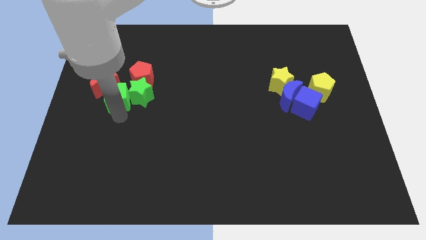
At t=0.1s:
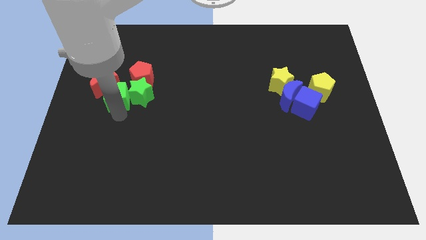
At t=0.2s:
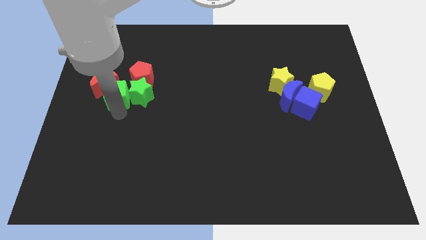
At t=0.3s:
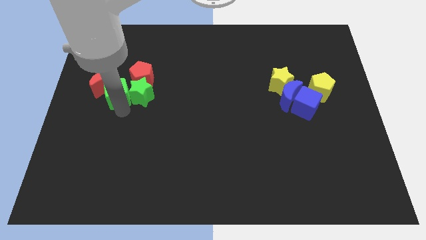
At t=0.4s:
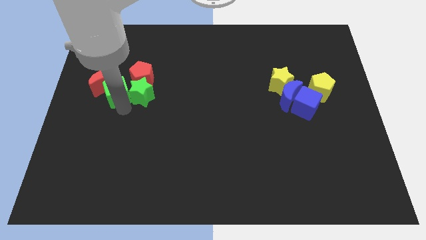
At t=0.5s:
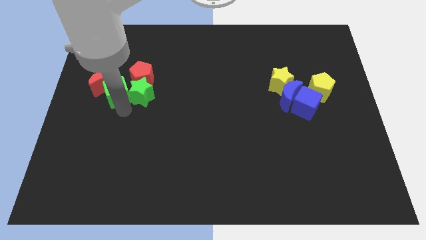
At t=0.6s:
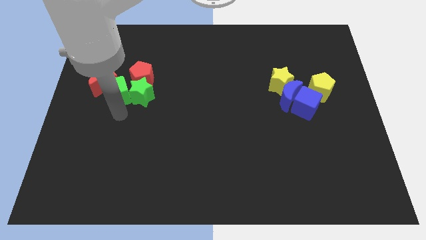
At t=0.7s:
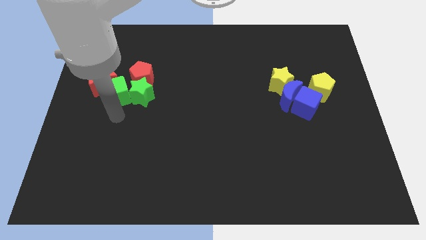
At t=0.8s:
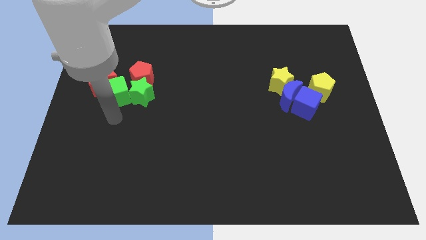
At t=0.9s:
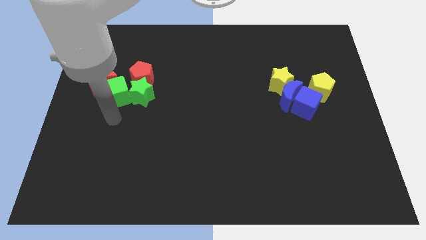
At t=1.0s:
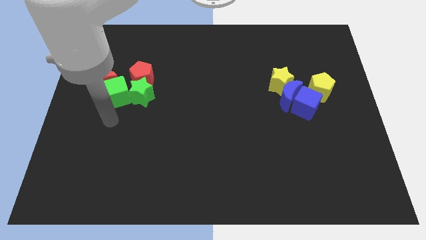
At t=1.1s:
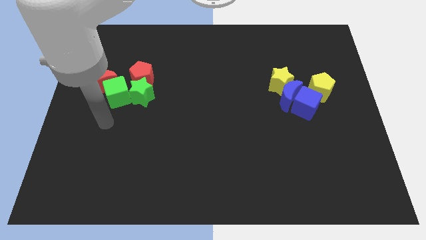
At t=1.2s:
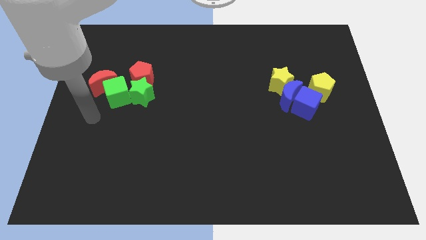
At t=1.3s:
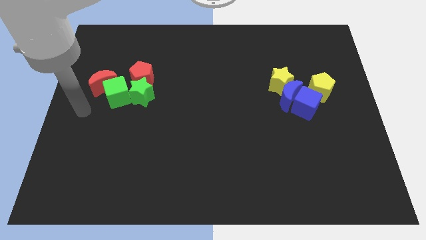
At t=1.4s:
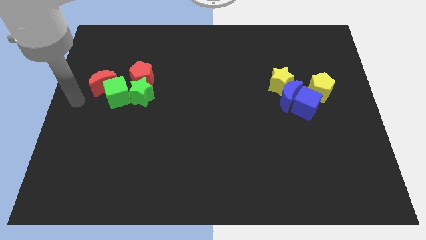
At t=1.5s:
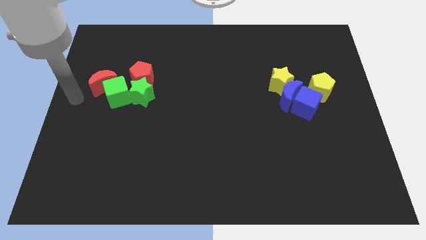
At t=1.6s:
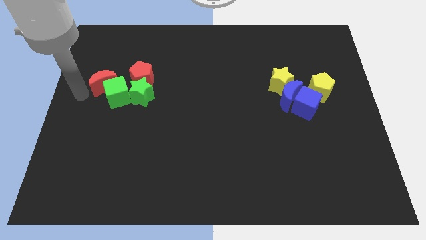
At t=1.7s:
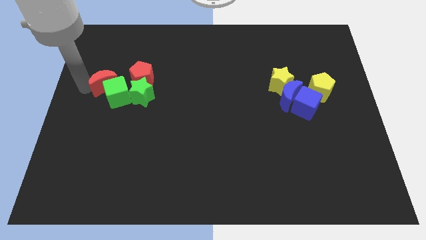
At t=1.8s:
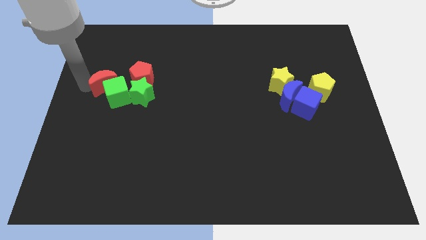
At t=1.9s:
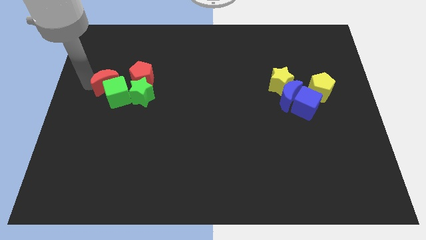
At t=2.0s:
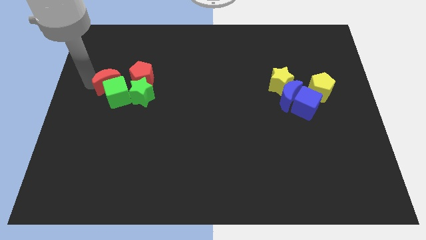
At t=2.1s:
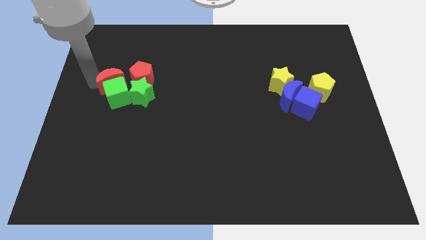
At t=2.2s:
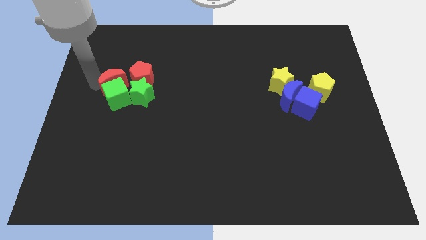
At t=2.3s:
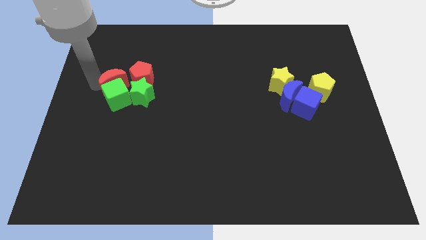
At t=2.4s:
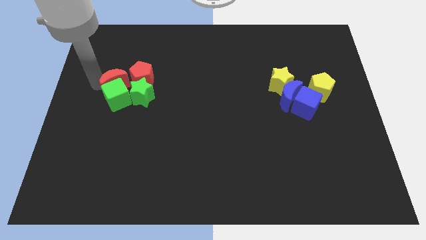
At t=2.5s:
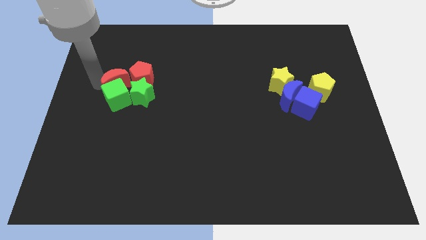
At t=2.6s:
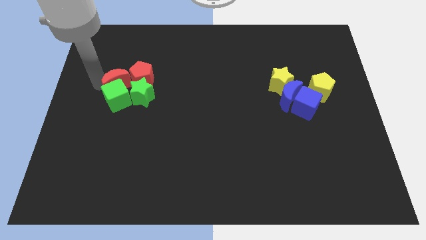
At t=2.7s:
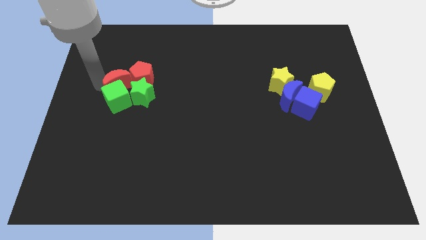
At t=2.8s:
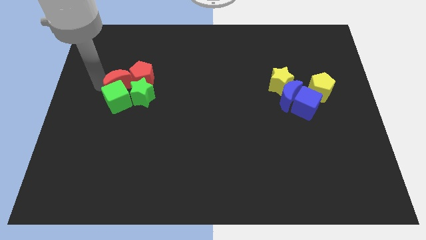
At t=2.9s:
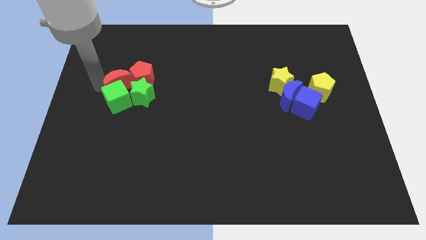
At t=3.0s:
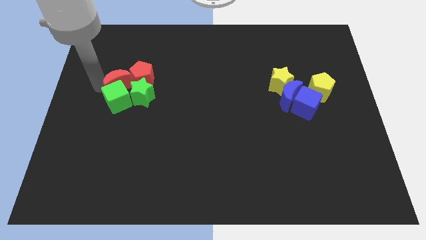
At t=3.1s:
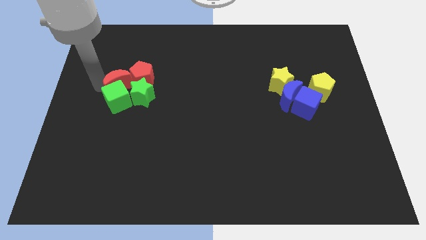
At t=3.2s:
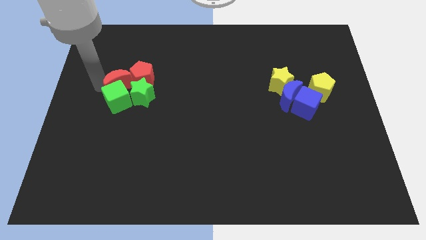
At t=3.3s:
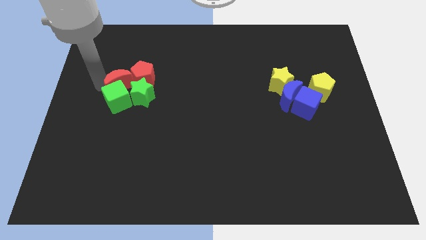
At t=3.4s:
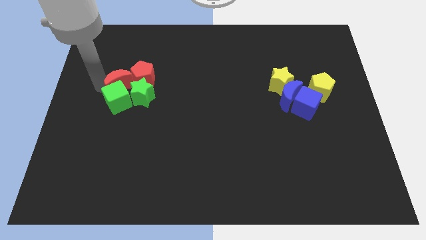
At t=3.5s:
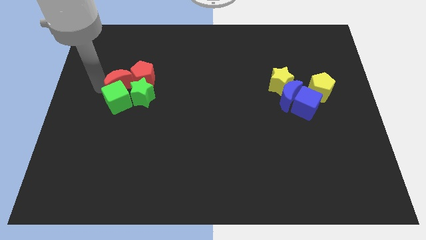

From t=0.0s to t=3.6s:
adjust the red blocks and green blocks

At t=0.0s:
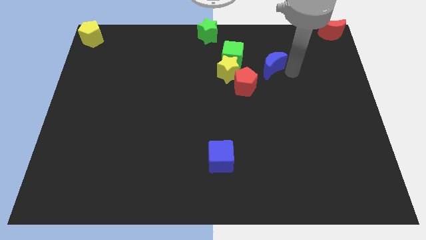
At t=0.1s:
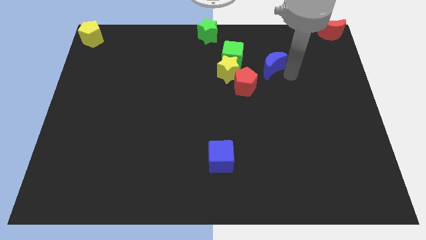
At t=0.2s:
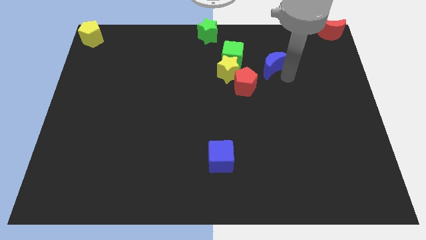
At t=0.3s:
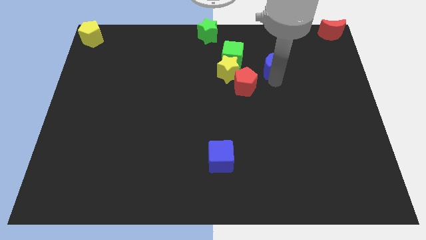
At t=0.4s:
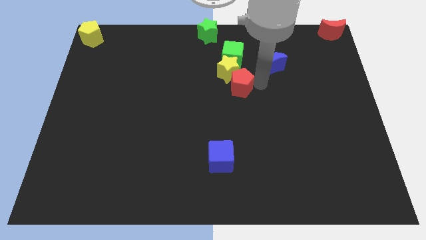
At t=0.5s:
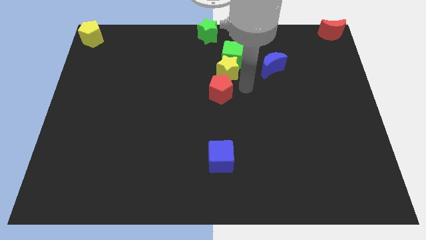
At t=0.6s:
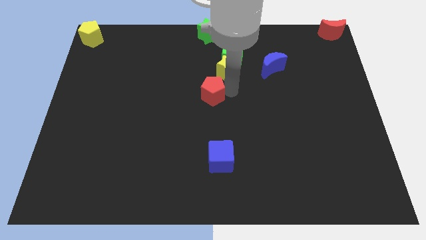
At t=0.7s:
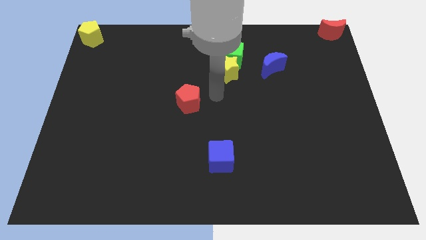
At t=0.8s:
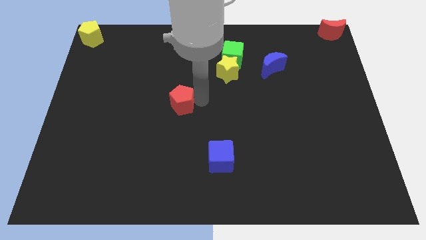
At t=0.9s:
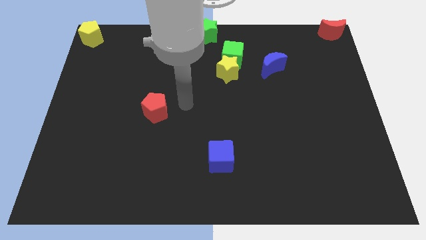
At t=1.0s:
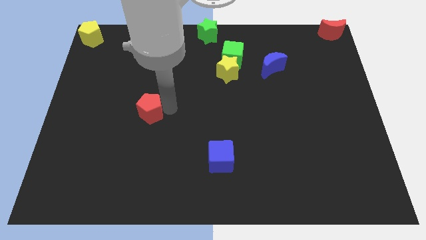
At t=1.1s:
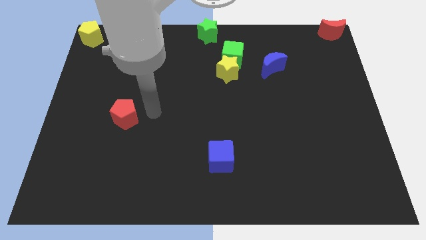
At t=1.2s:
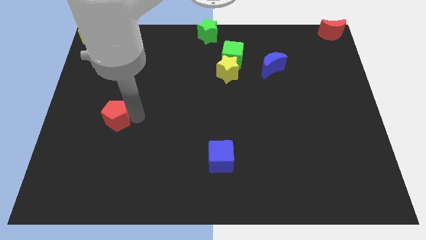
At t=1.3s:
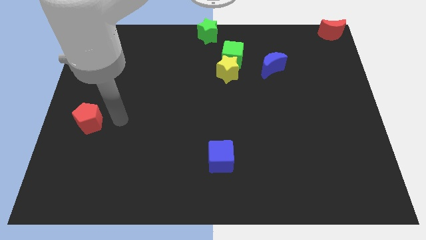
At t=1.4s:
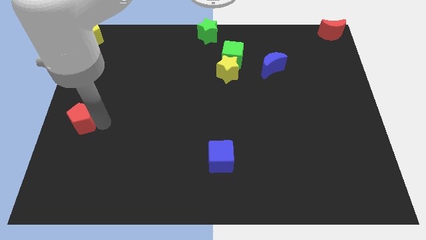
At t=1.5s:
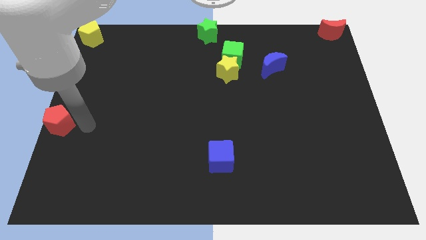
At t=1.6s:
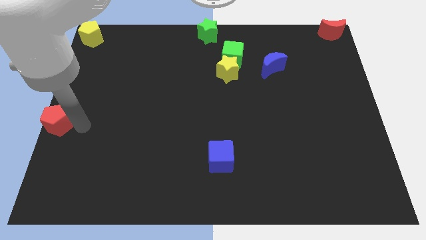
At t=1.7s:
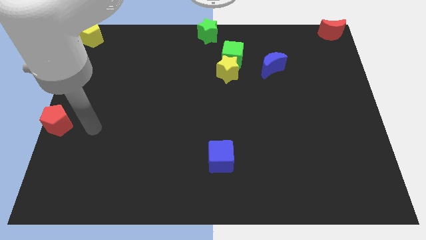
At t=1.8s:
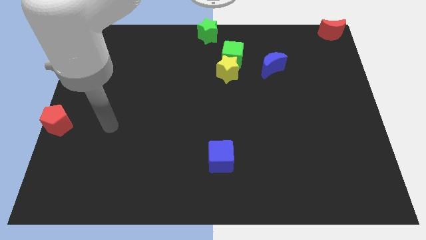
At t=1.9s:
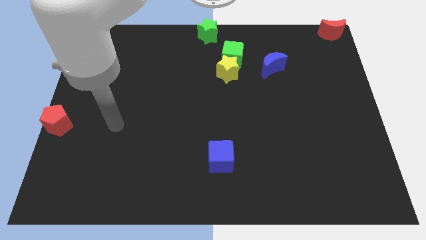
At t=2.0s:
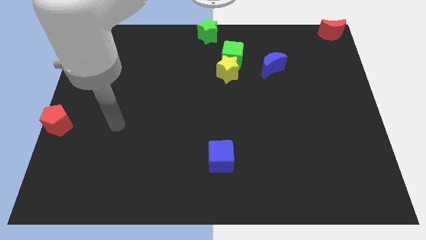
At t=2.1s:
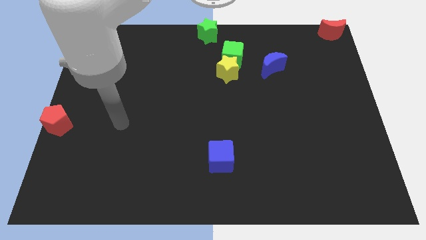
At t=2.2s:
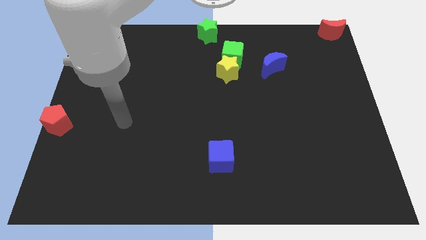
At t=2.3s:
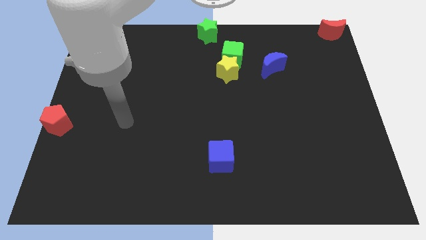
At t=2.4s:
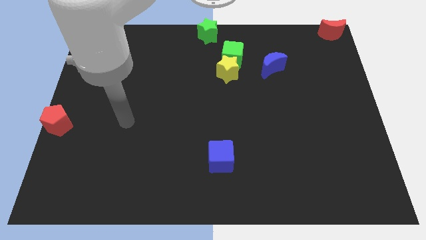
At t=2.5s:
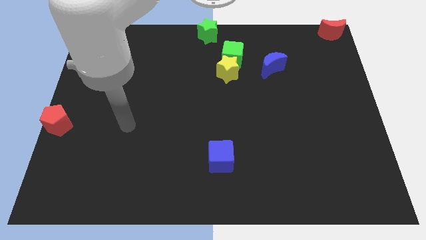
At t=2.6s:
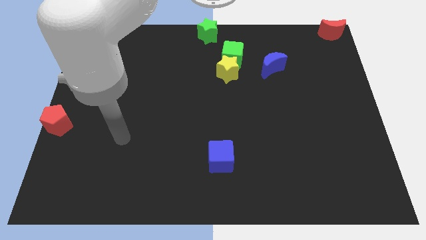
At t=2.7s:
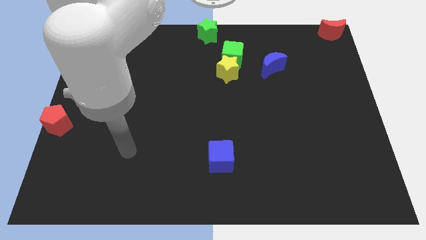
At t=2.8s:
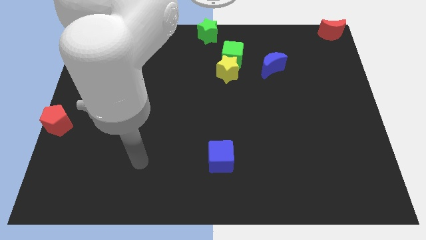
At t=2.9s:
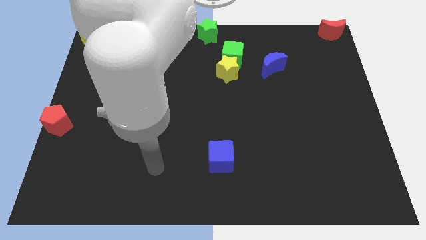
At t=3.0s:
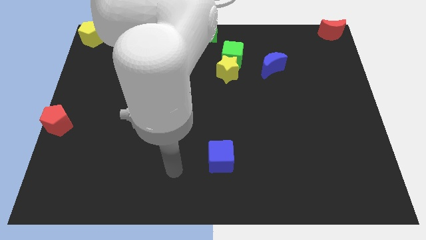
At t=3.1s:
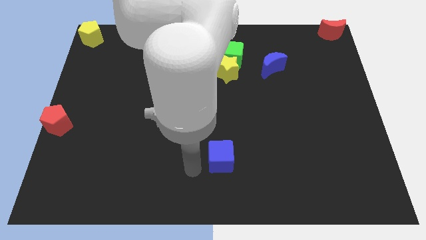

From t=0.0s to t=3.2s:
push the red pentagon to the left center of the board

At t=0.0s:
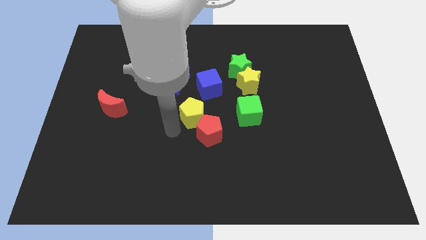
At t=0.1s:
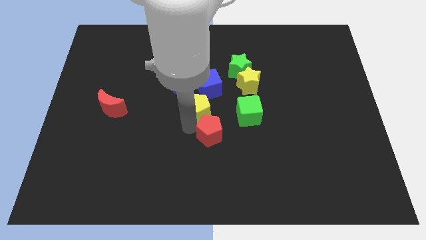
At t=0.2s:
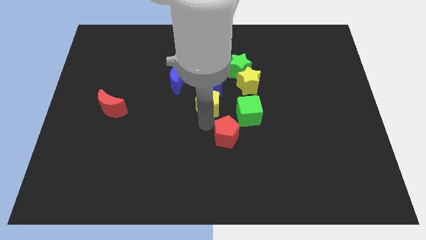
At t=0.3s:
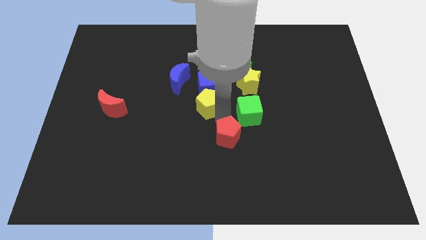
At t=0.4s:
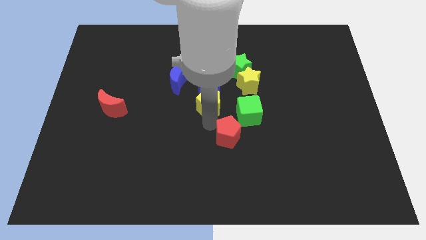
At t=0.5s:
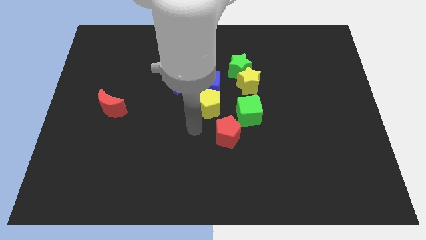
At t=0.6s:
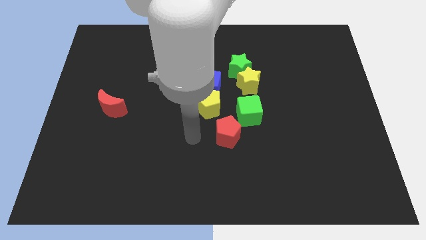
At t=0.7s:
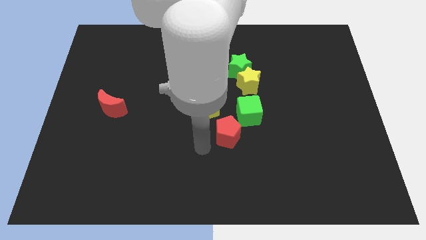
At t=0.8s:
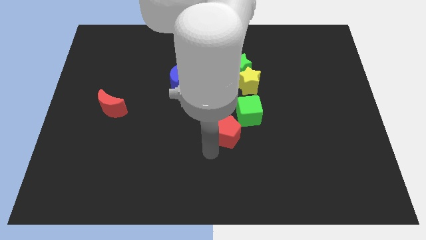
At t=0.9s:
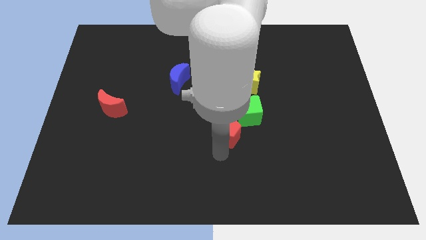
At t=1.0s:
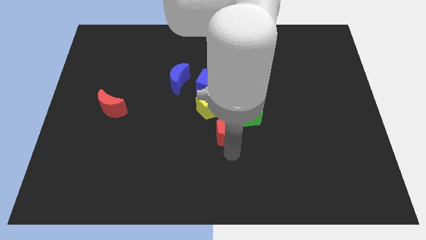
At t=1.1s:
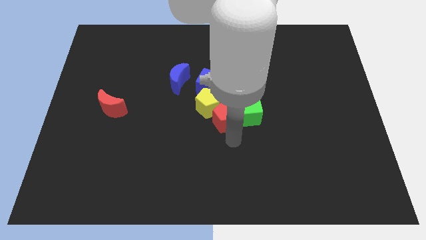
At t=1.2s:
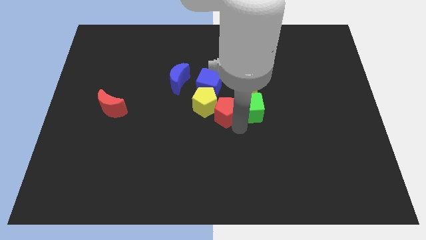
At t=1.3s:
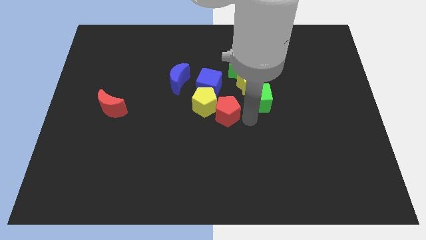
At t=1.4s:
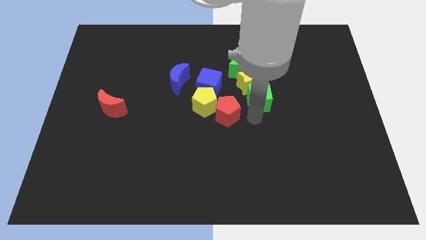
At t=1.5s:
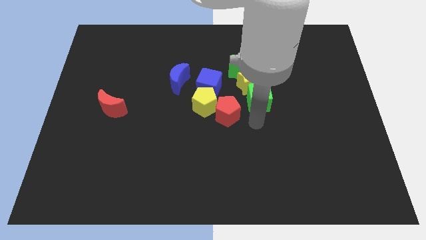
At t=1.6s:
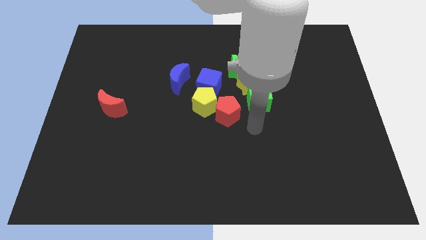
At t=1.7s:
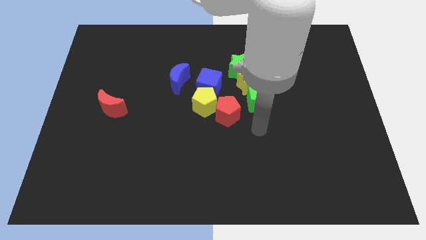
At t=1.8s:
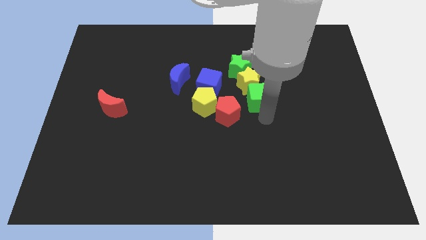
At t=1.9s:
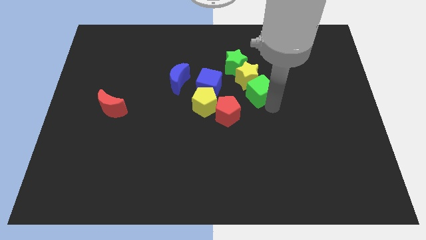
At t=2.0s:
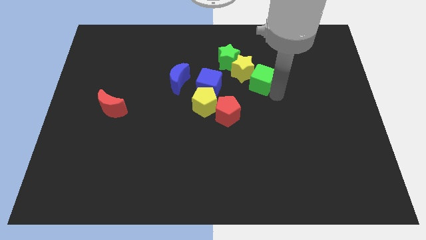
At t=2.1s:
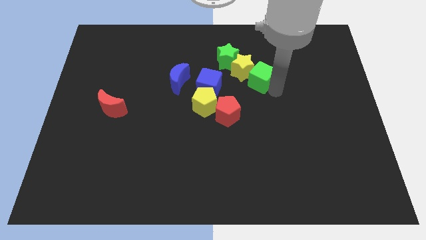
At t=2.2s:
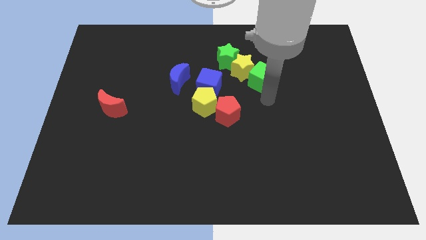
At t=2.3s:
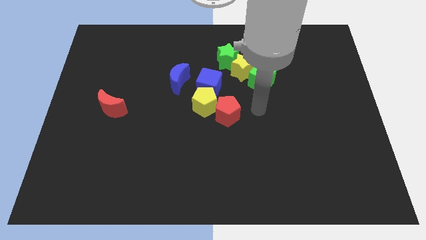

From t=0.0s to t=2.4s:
move the green cube diagonally below the yellow star
